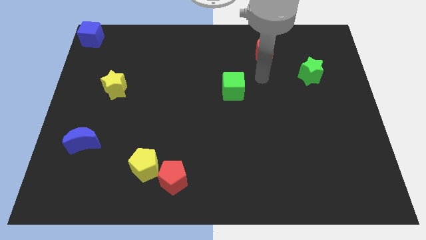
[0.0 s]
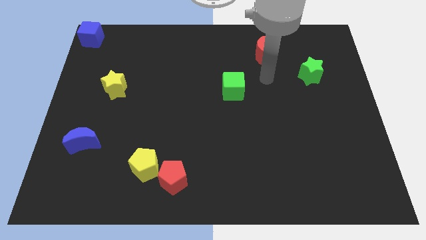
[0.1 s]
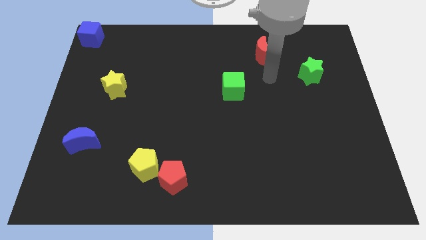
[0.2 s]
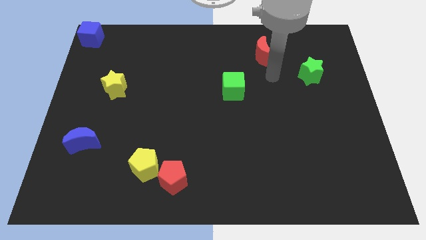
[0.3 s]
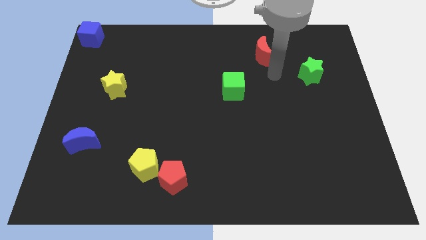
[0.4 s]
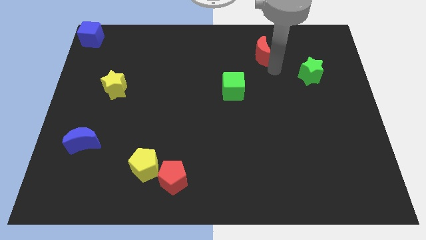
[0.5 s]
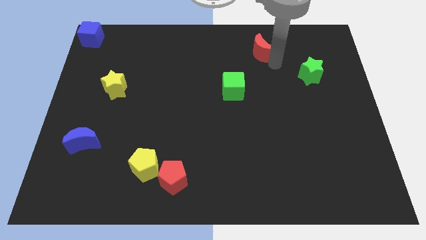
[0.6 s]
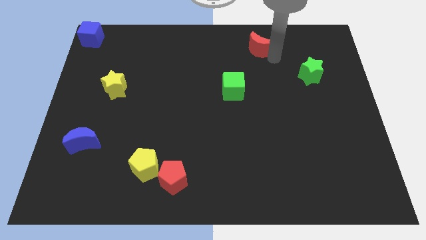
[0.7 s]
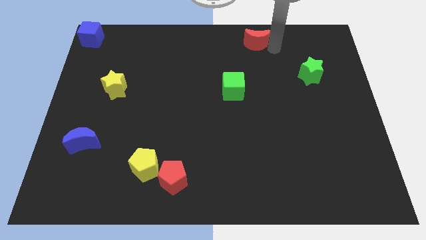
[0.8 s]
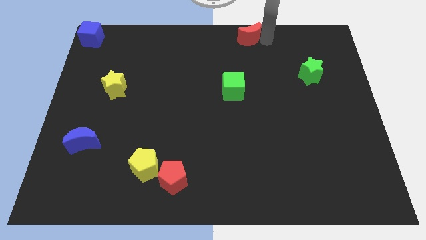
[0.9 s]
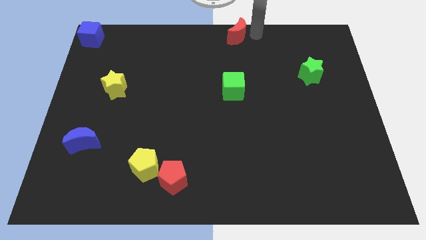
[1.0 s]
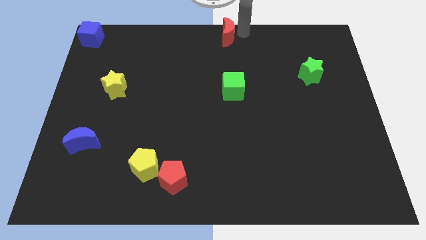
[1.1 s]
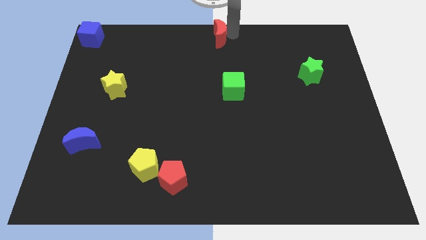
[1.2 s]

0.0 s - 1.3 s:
push the red crescent towards the top center of the board

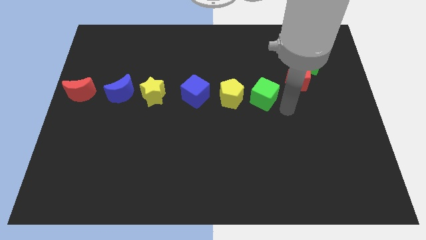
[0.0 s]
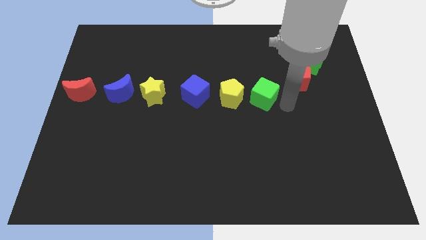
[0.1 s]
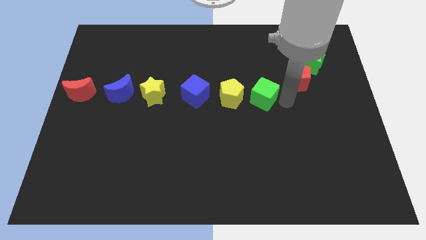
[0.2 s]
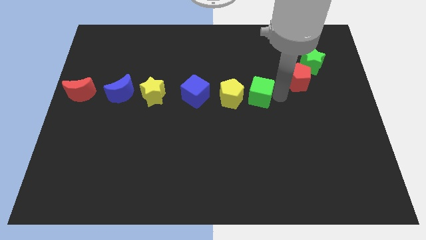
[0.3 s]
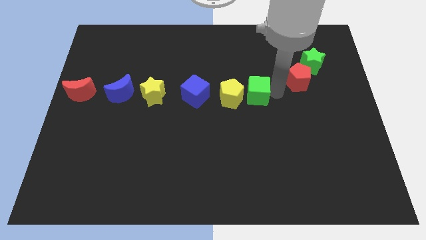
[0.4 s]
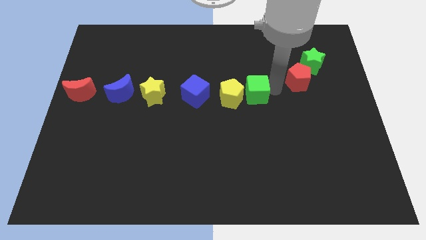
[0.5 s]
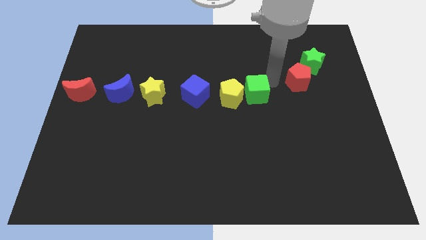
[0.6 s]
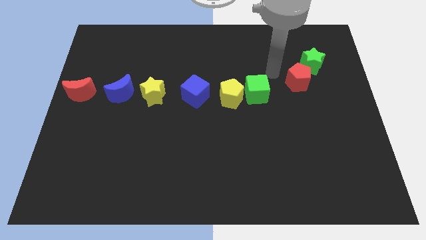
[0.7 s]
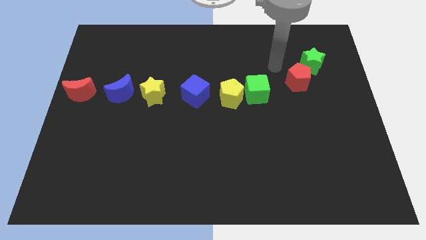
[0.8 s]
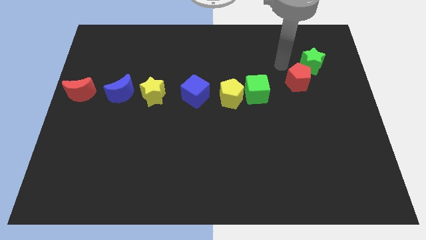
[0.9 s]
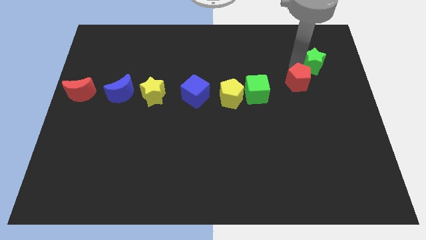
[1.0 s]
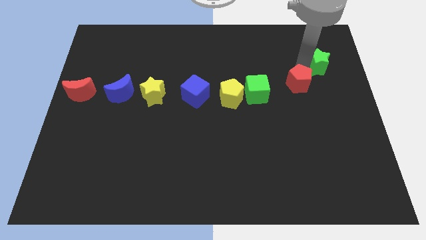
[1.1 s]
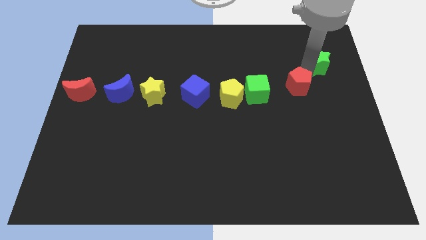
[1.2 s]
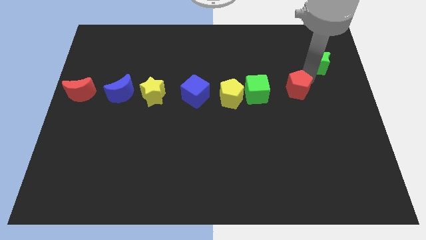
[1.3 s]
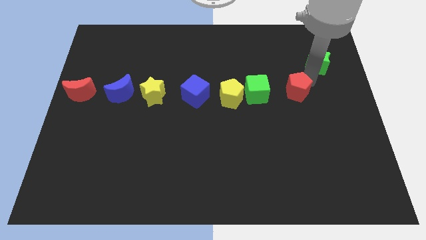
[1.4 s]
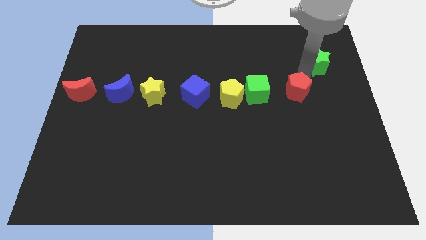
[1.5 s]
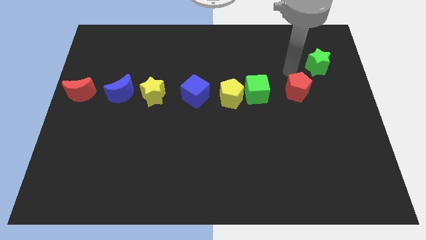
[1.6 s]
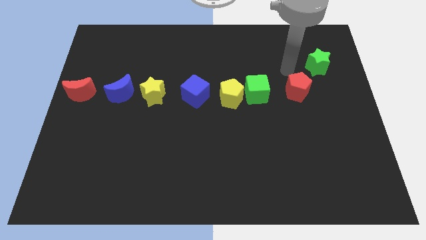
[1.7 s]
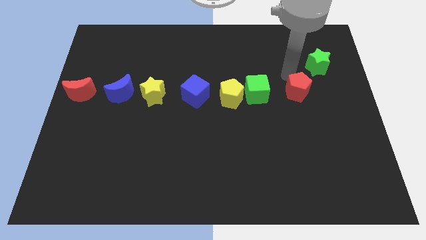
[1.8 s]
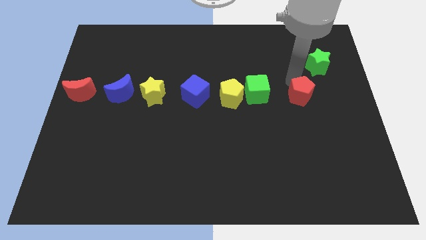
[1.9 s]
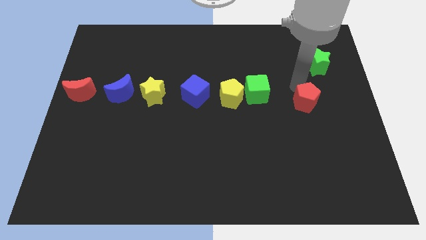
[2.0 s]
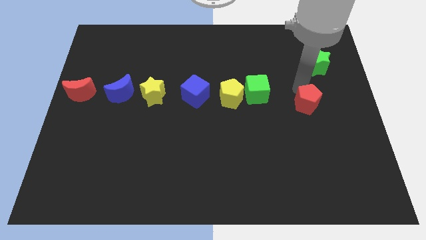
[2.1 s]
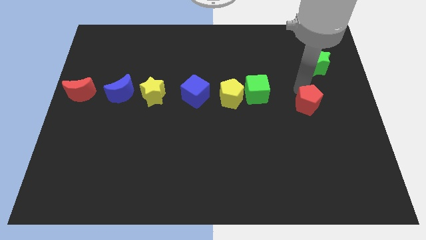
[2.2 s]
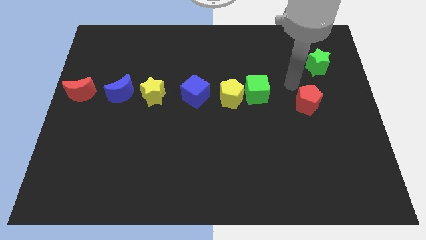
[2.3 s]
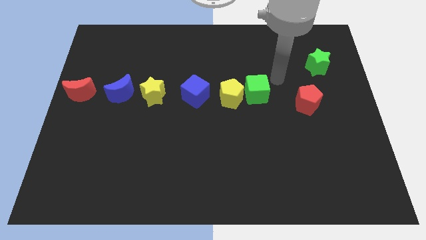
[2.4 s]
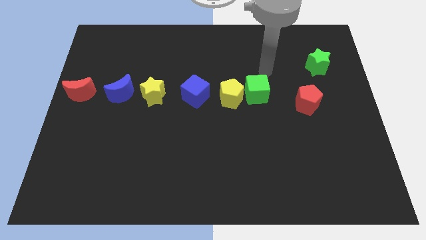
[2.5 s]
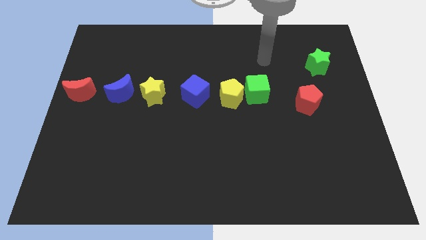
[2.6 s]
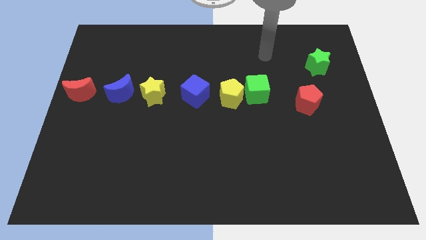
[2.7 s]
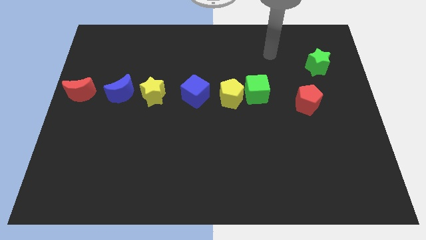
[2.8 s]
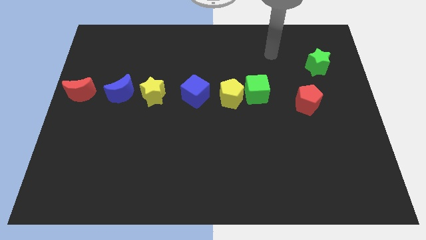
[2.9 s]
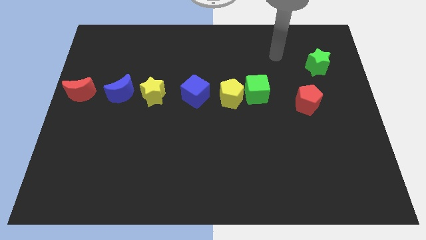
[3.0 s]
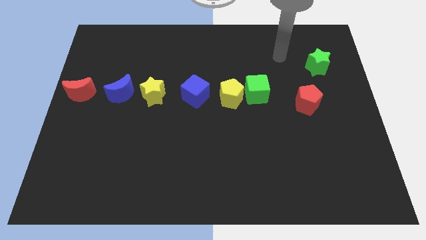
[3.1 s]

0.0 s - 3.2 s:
move the red pentagon diagonally bottom right to the green cube

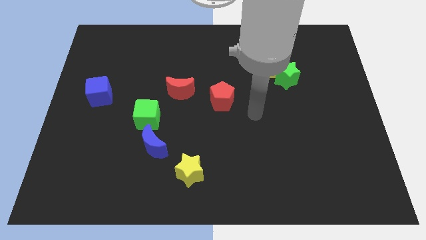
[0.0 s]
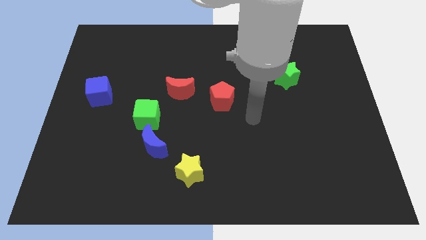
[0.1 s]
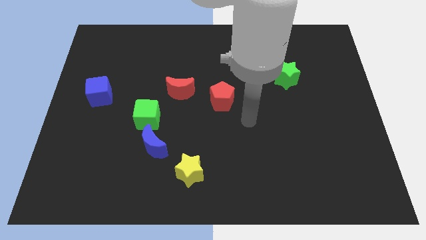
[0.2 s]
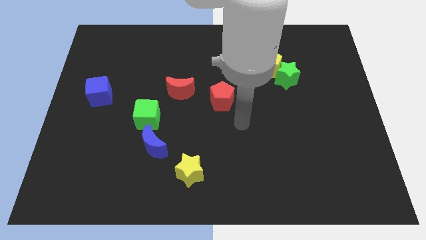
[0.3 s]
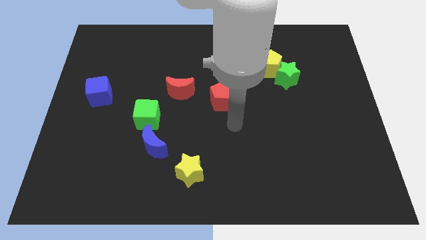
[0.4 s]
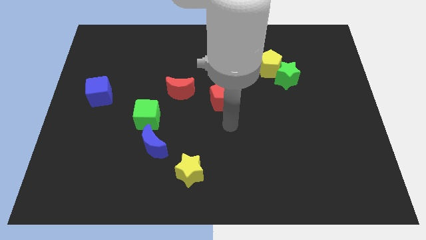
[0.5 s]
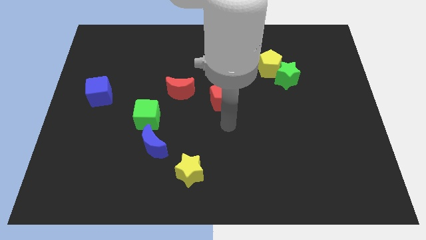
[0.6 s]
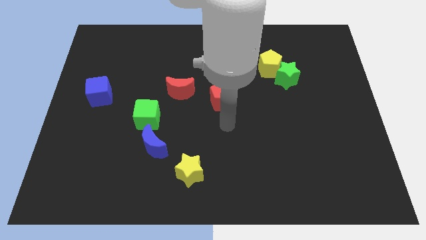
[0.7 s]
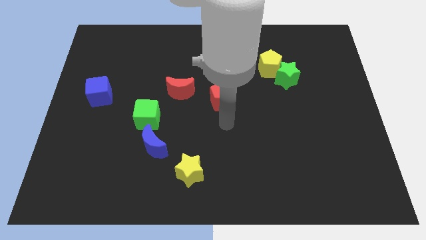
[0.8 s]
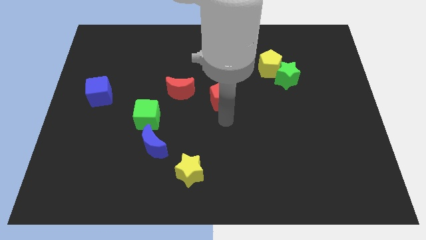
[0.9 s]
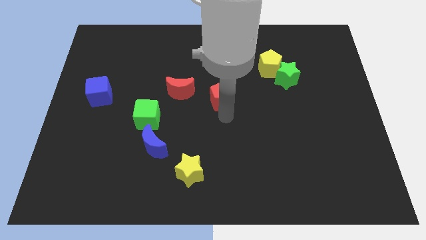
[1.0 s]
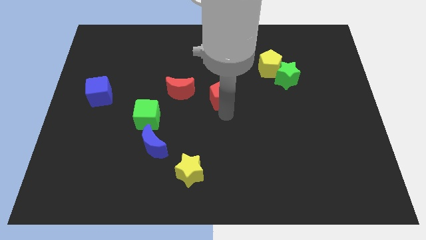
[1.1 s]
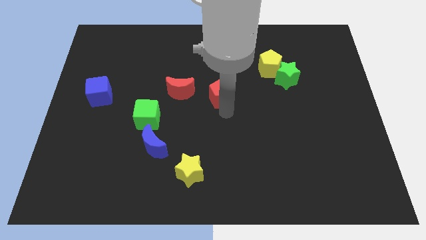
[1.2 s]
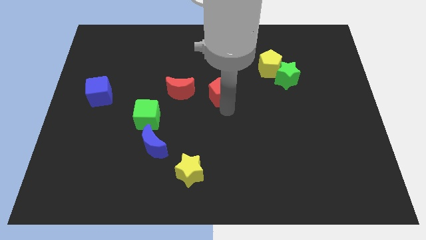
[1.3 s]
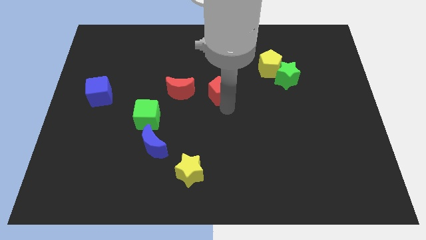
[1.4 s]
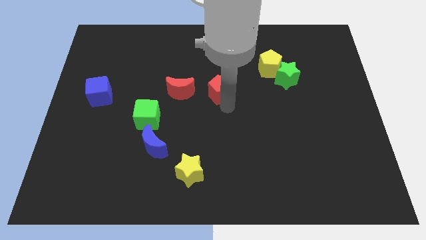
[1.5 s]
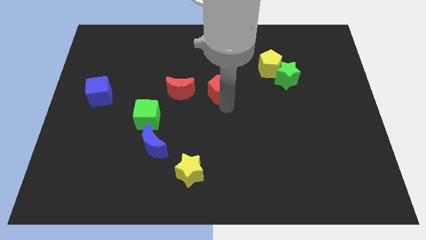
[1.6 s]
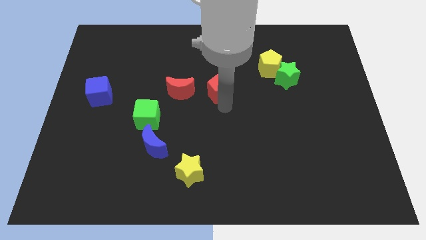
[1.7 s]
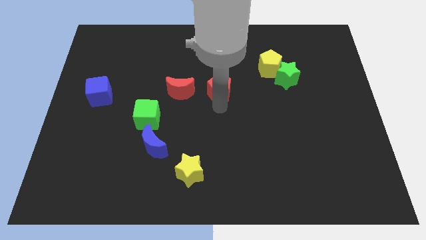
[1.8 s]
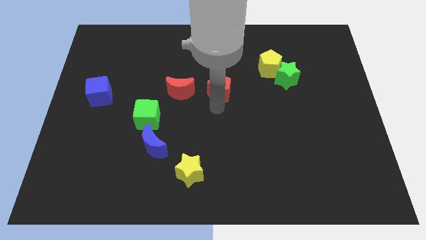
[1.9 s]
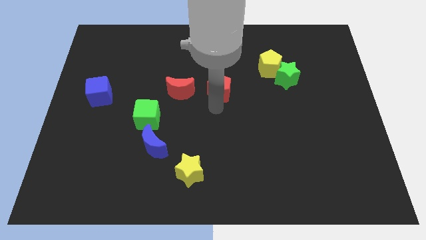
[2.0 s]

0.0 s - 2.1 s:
move red pentagon slightly towards its top

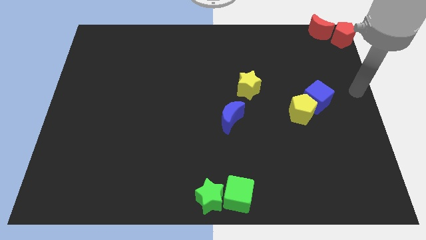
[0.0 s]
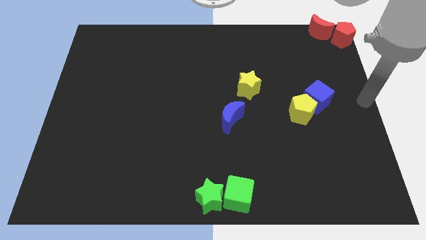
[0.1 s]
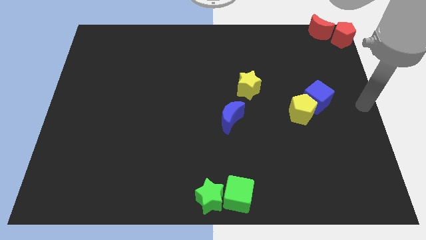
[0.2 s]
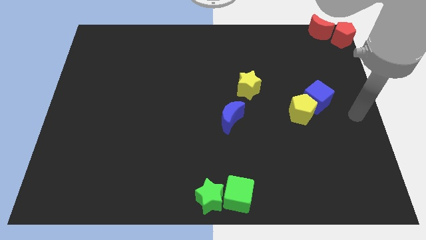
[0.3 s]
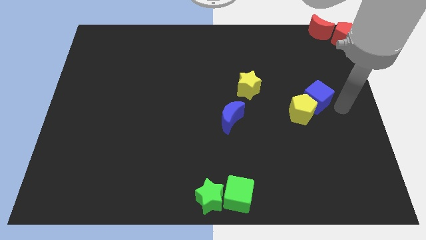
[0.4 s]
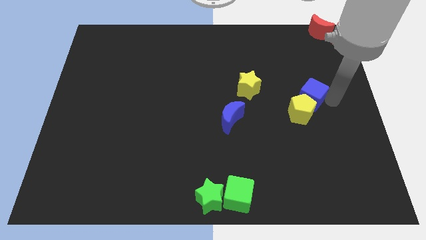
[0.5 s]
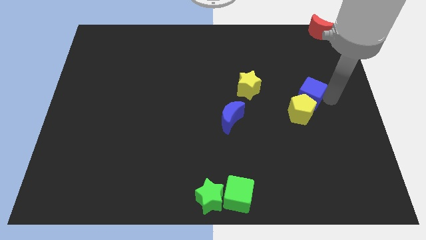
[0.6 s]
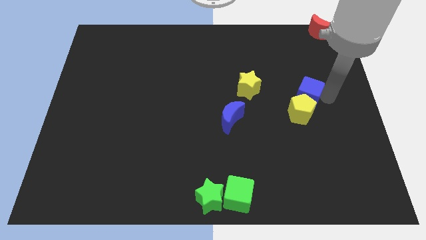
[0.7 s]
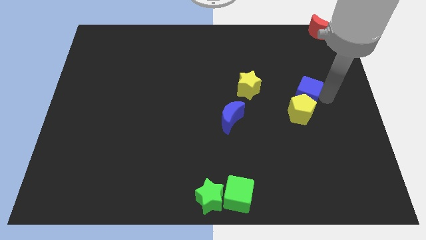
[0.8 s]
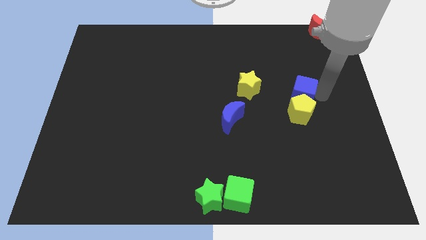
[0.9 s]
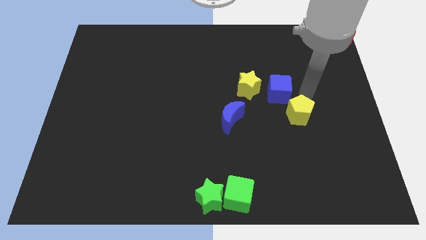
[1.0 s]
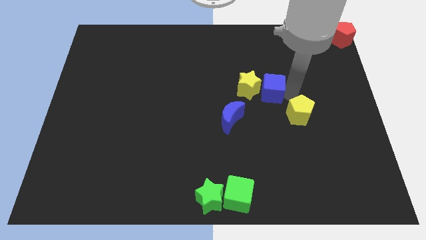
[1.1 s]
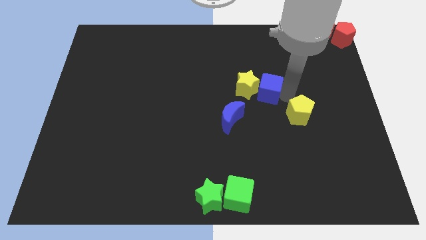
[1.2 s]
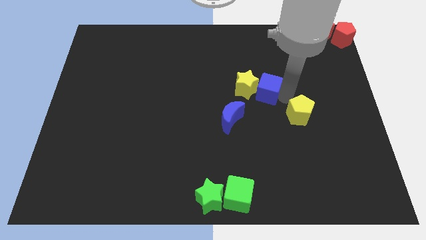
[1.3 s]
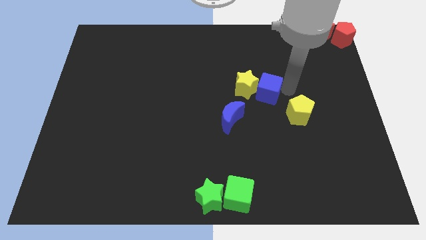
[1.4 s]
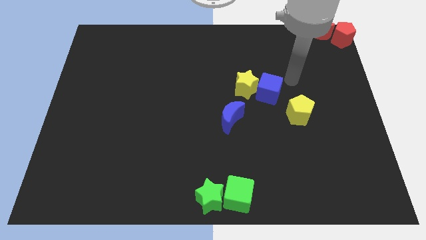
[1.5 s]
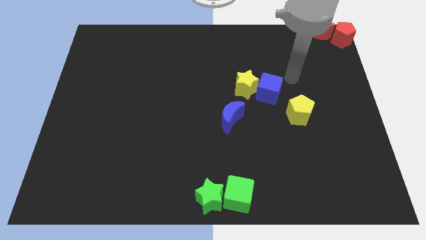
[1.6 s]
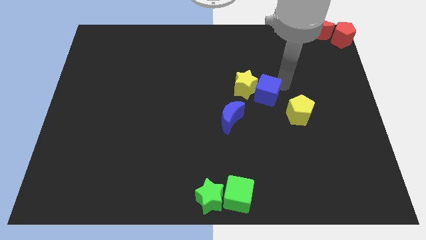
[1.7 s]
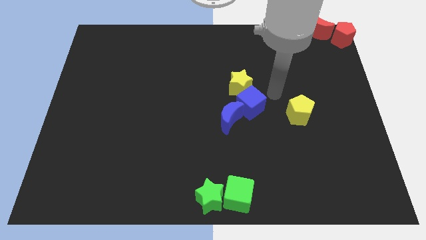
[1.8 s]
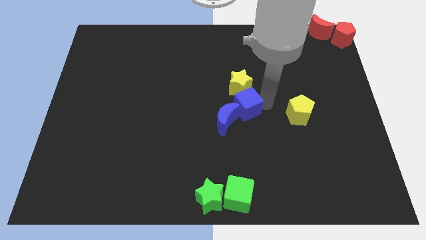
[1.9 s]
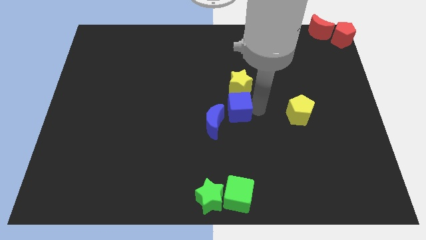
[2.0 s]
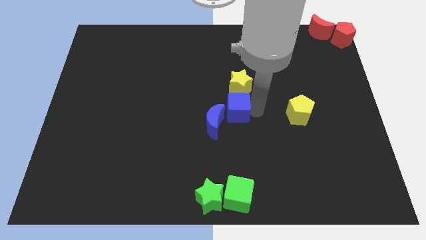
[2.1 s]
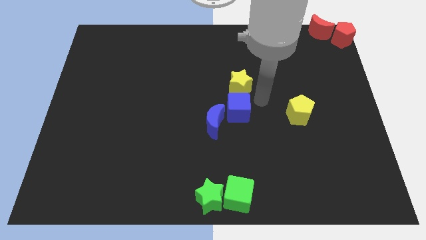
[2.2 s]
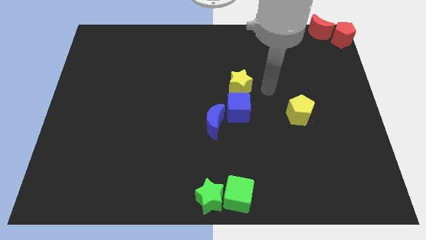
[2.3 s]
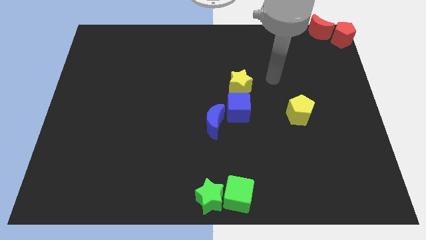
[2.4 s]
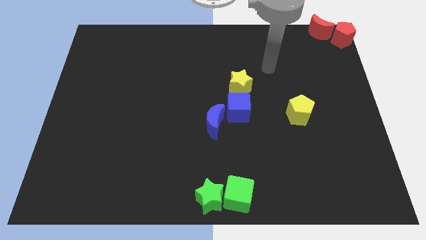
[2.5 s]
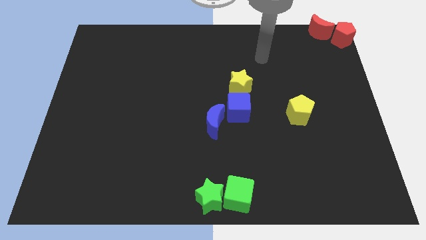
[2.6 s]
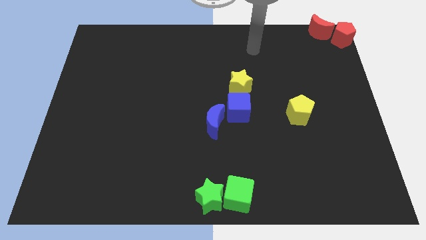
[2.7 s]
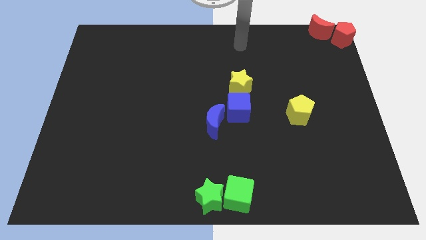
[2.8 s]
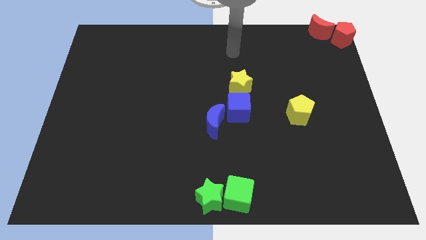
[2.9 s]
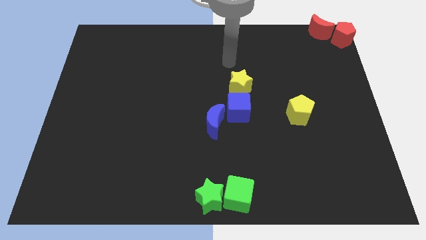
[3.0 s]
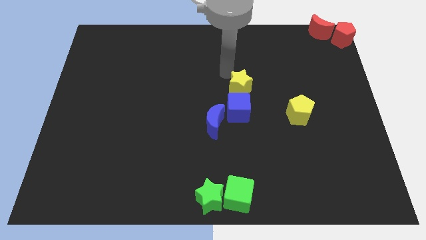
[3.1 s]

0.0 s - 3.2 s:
move the blue cube below the yellow star at the center of the board
